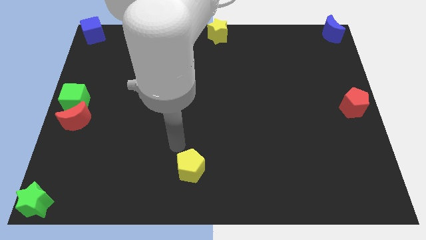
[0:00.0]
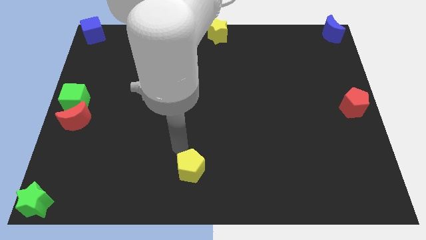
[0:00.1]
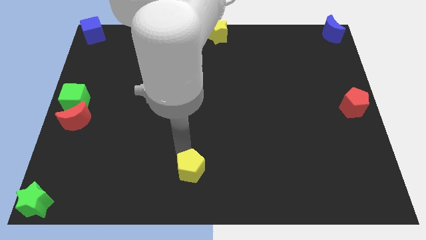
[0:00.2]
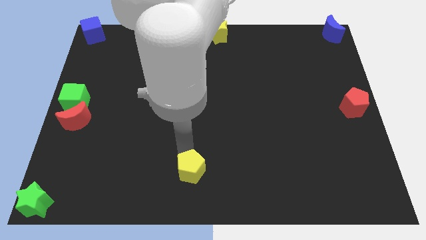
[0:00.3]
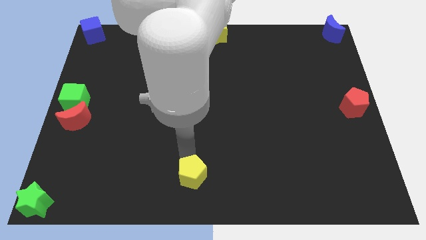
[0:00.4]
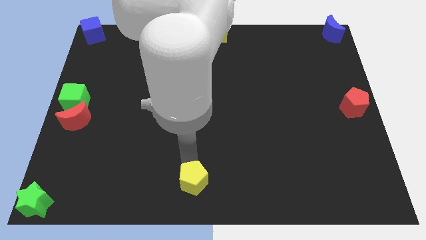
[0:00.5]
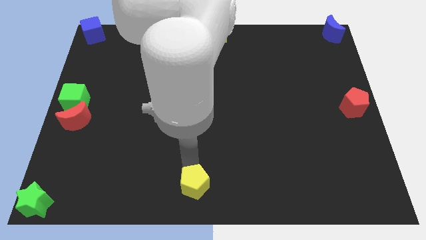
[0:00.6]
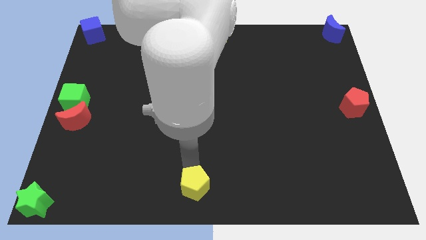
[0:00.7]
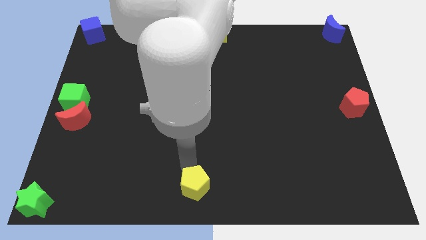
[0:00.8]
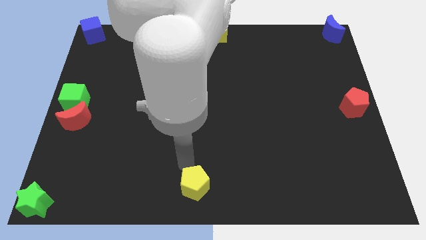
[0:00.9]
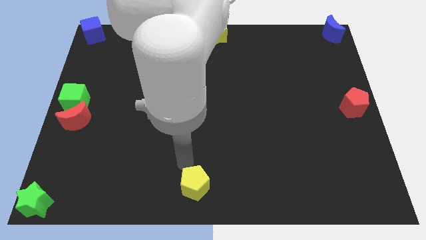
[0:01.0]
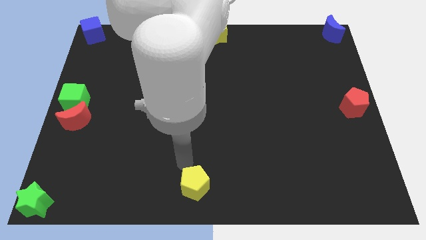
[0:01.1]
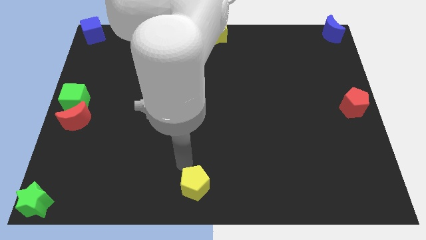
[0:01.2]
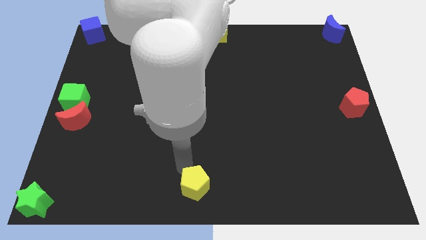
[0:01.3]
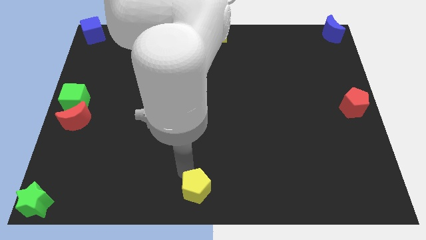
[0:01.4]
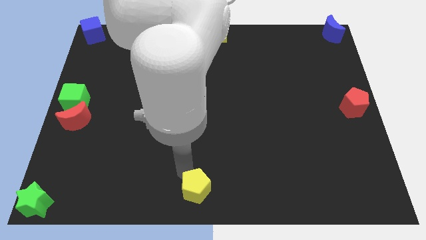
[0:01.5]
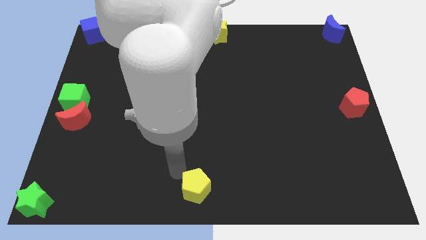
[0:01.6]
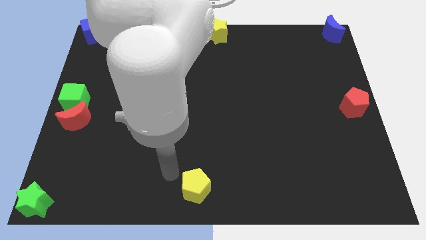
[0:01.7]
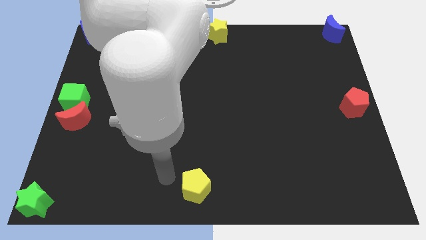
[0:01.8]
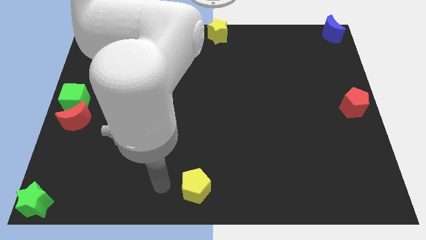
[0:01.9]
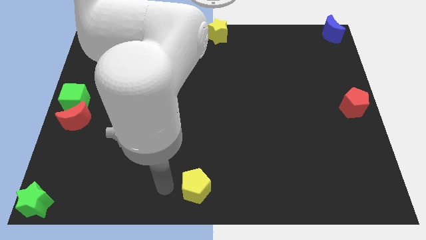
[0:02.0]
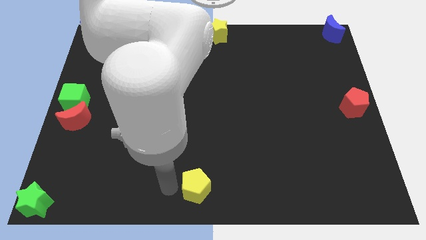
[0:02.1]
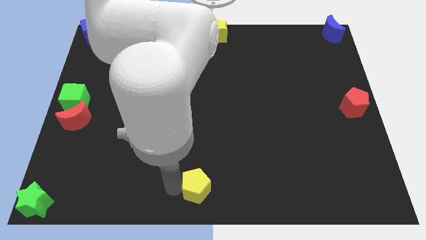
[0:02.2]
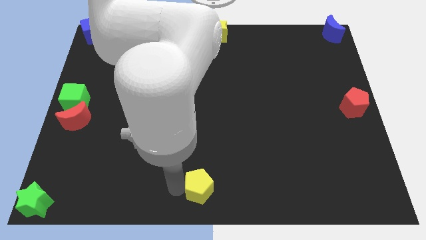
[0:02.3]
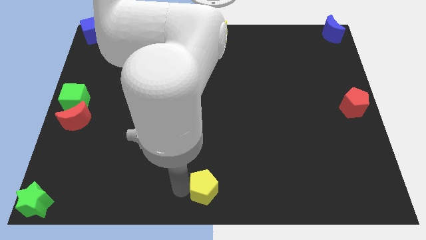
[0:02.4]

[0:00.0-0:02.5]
place the yellow pentagon at the bottom center of the board

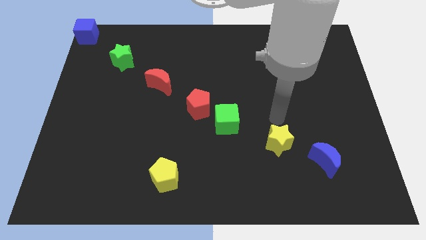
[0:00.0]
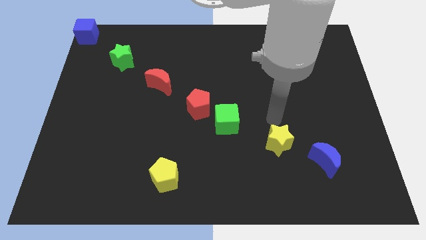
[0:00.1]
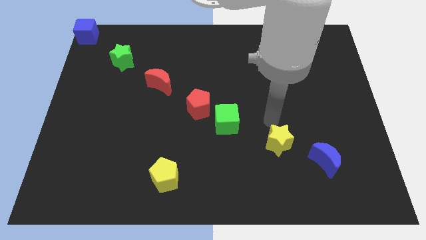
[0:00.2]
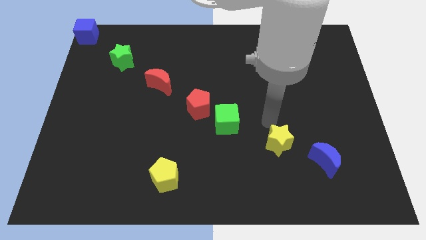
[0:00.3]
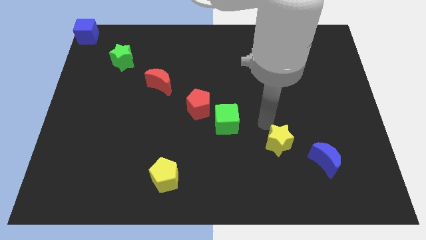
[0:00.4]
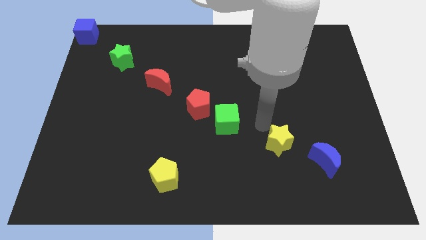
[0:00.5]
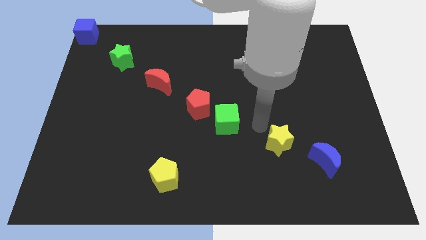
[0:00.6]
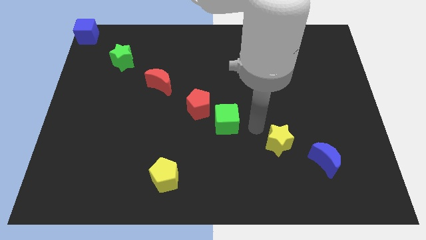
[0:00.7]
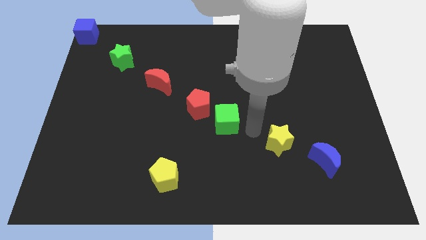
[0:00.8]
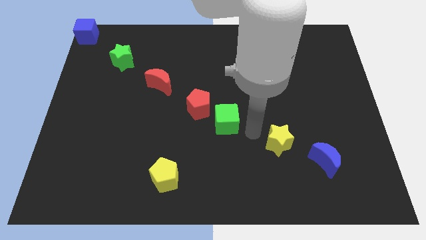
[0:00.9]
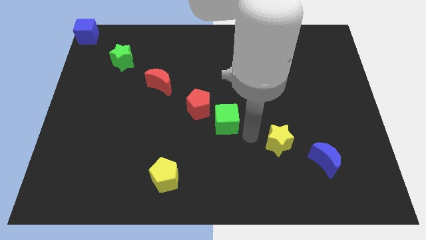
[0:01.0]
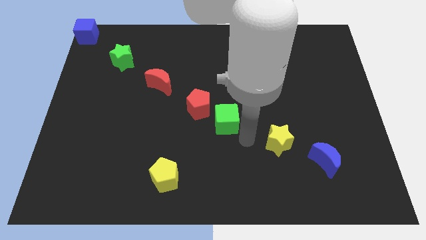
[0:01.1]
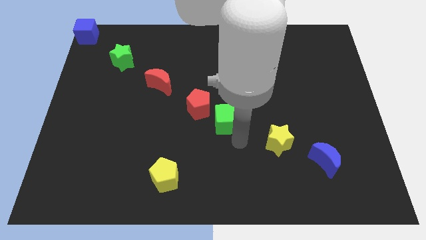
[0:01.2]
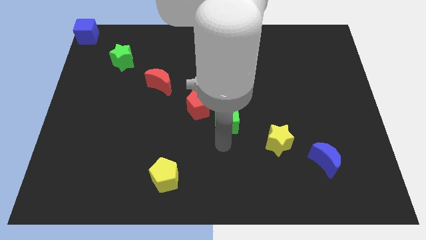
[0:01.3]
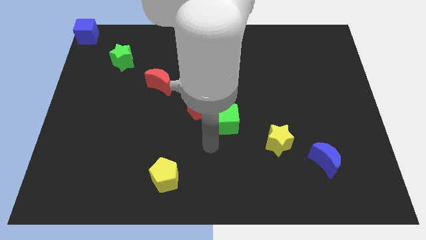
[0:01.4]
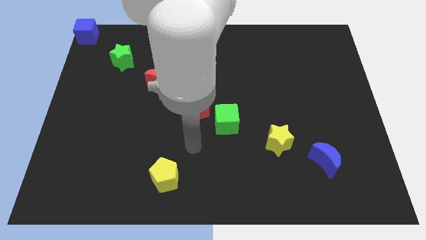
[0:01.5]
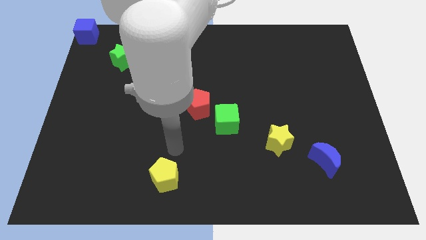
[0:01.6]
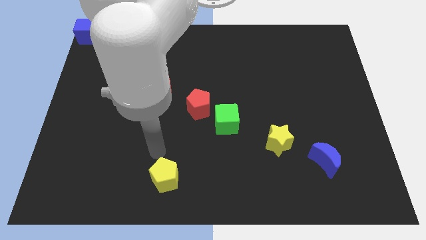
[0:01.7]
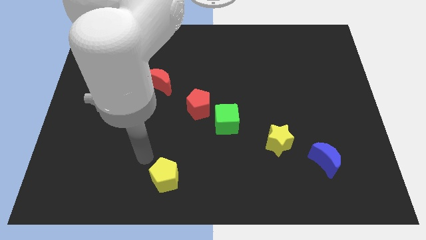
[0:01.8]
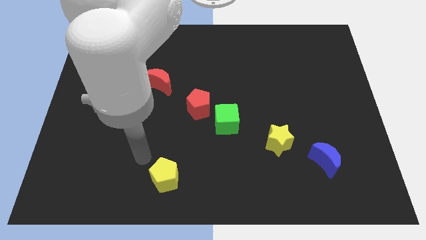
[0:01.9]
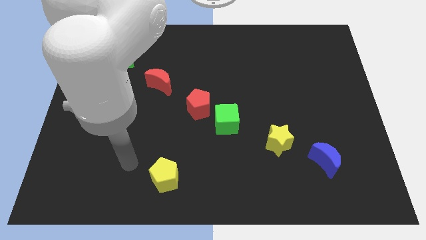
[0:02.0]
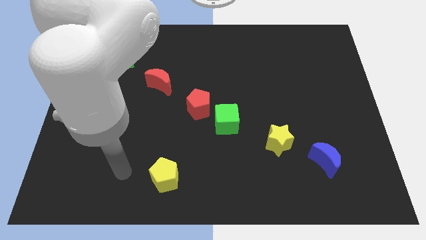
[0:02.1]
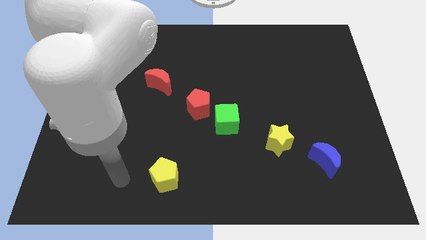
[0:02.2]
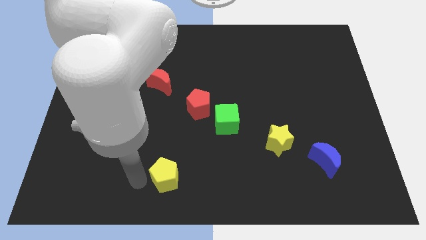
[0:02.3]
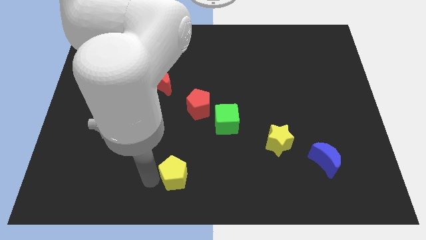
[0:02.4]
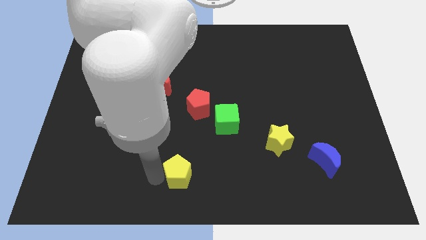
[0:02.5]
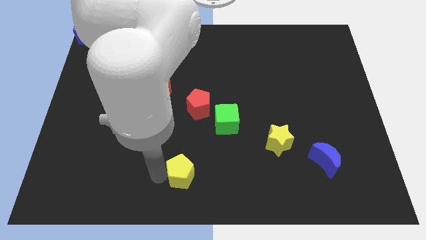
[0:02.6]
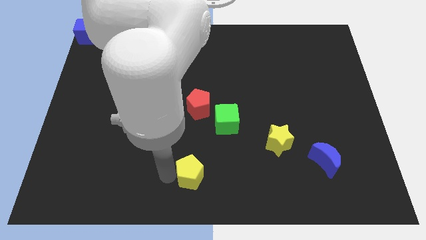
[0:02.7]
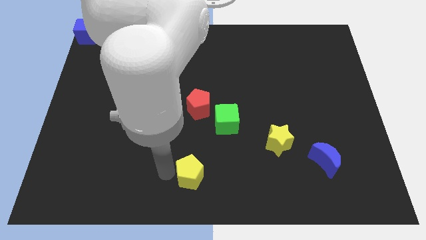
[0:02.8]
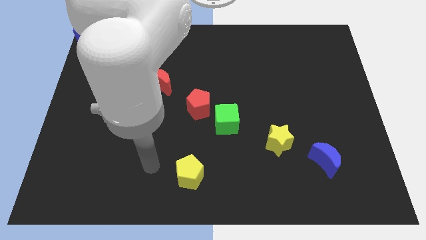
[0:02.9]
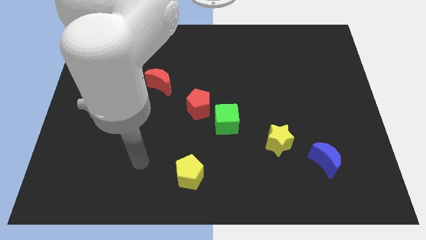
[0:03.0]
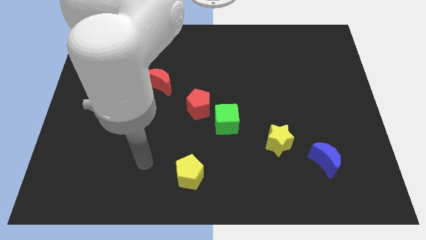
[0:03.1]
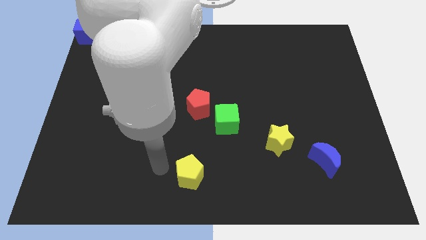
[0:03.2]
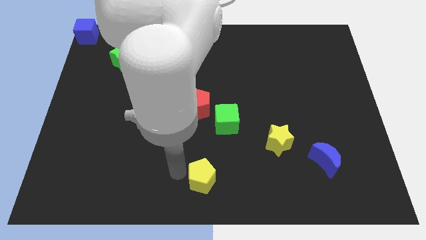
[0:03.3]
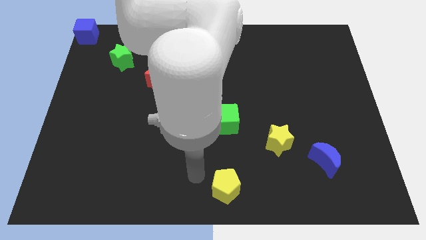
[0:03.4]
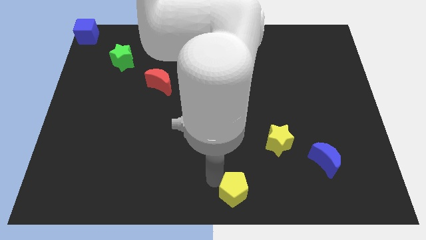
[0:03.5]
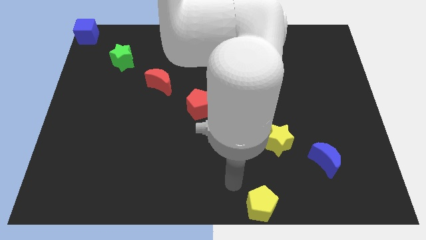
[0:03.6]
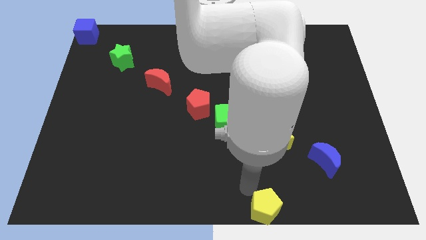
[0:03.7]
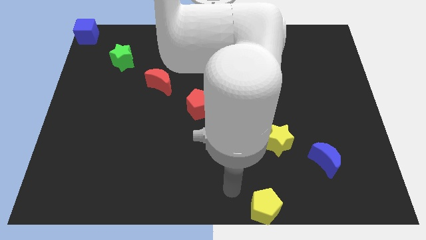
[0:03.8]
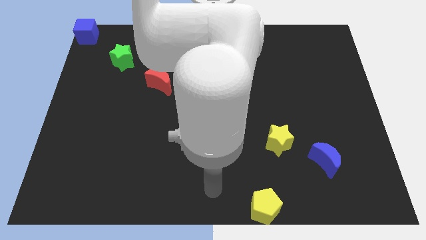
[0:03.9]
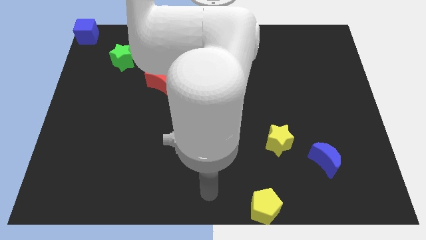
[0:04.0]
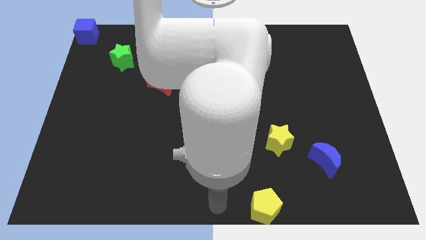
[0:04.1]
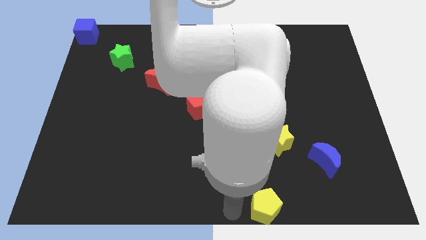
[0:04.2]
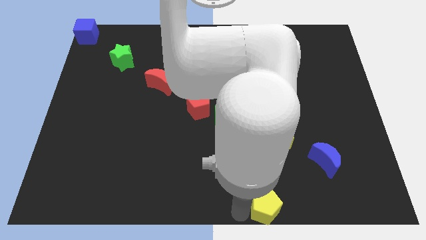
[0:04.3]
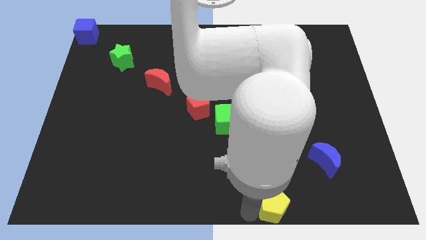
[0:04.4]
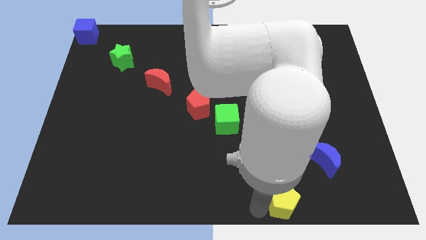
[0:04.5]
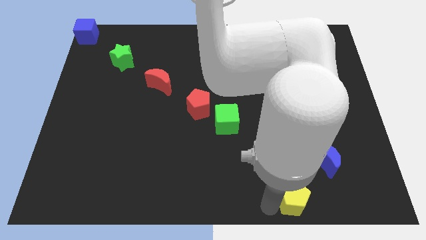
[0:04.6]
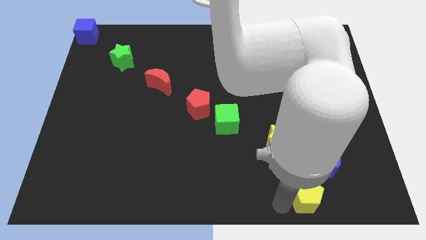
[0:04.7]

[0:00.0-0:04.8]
move the yellow pentagon to the bottom of the blue crescent

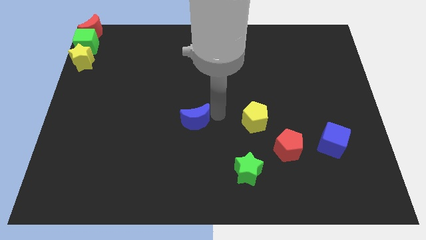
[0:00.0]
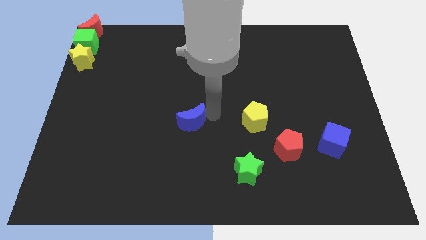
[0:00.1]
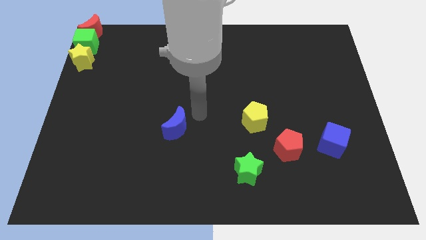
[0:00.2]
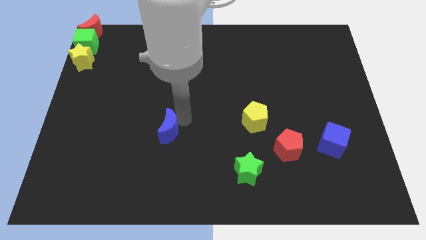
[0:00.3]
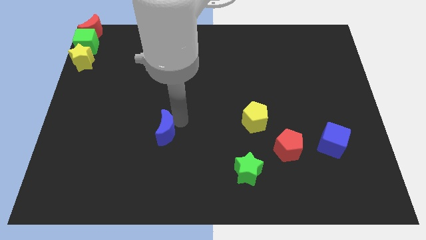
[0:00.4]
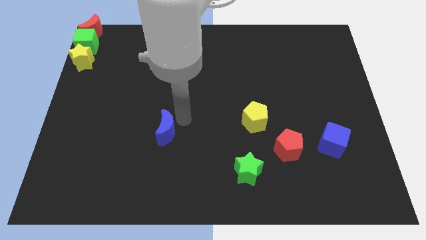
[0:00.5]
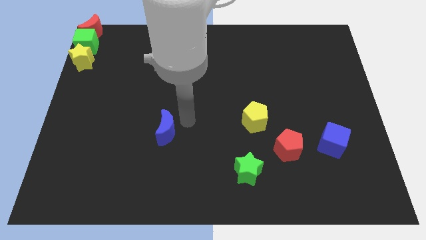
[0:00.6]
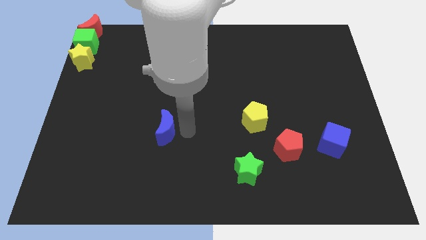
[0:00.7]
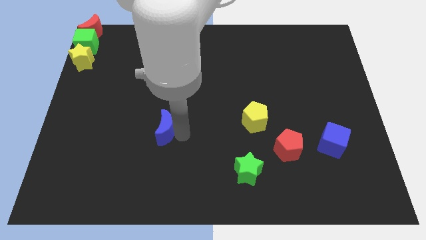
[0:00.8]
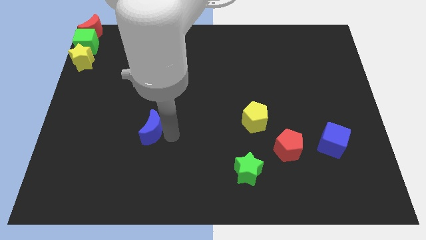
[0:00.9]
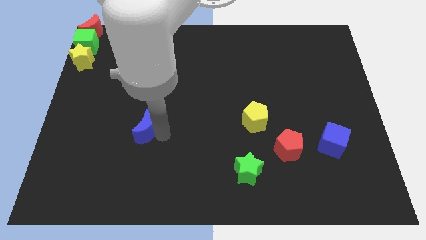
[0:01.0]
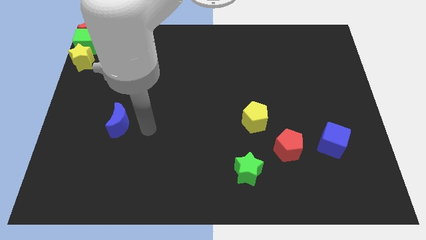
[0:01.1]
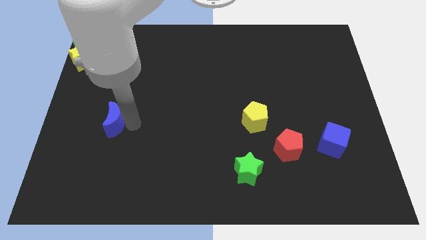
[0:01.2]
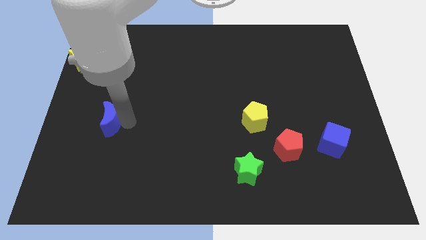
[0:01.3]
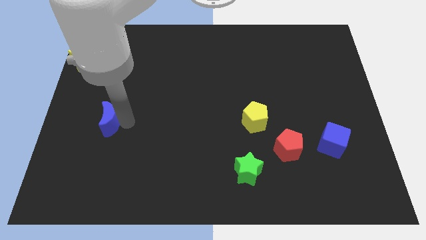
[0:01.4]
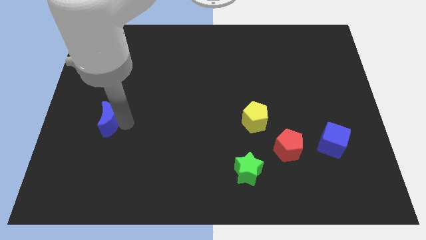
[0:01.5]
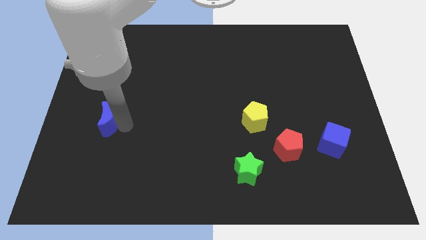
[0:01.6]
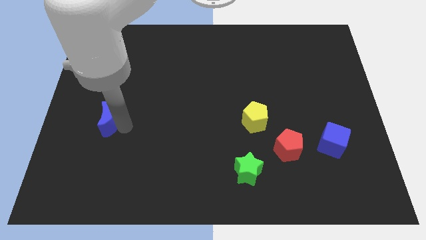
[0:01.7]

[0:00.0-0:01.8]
move the blue crescent away from the yellow pentagon horizontally
